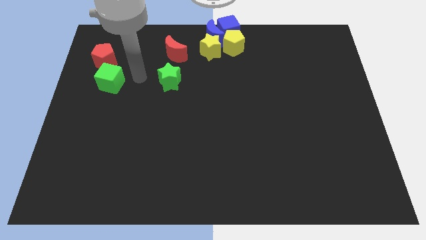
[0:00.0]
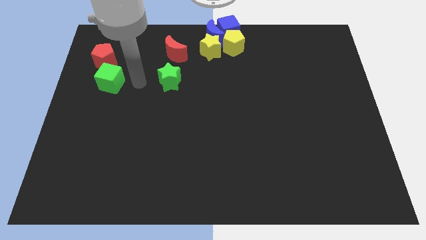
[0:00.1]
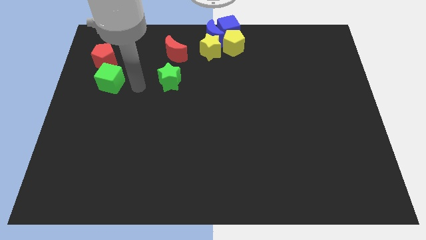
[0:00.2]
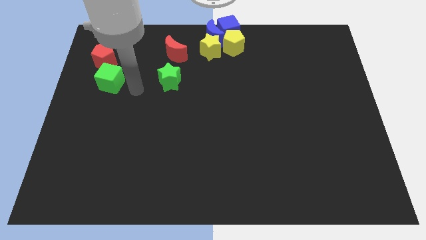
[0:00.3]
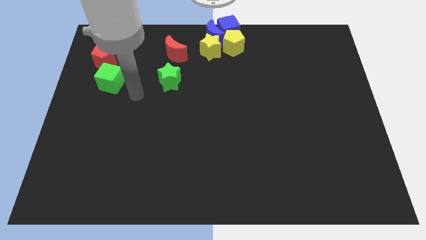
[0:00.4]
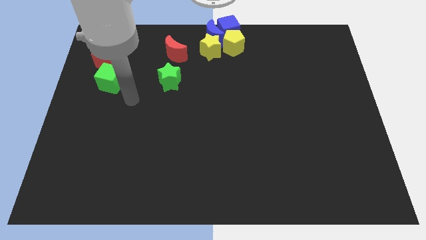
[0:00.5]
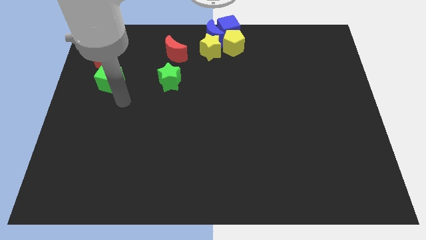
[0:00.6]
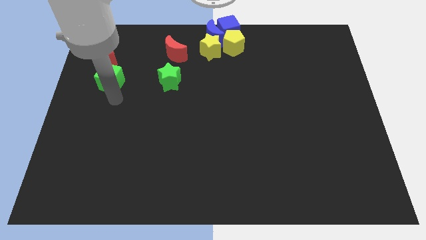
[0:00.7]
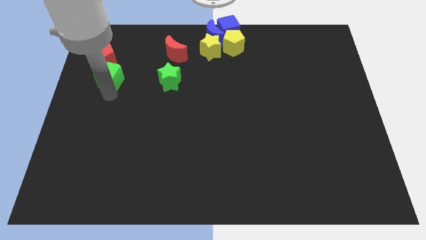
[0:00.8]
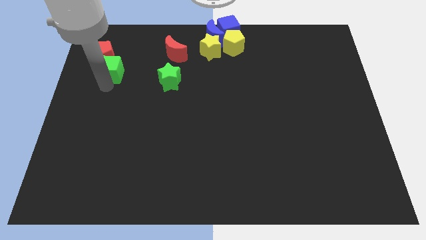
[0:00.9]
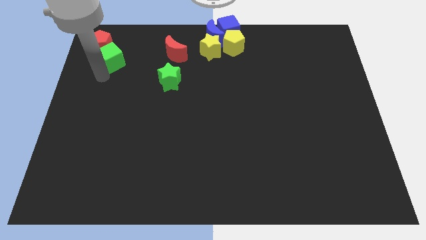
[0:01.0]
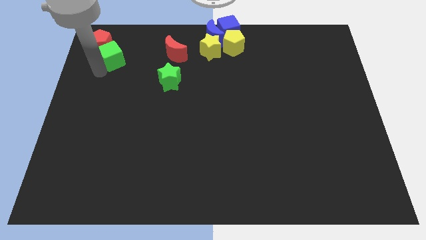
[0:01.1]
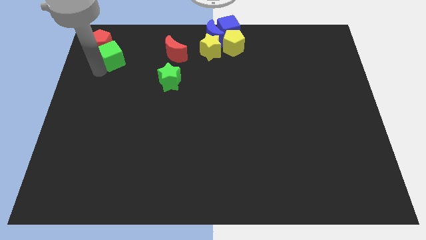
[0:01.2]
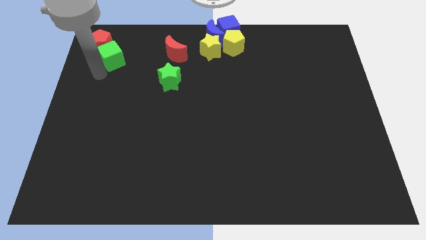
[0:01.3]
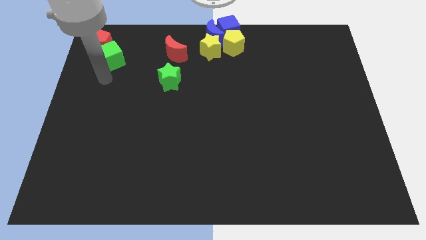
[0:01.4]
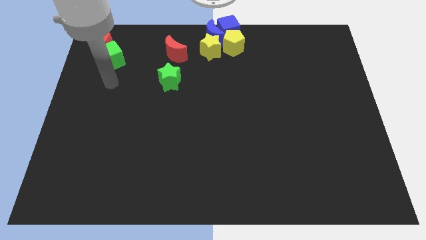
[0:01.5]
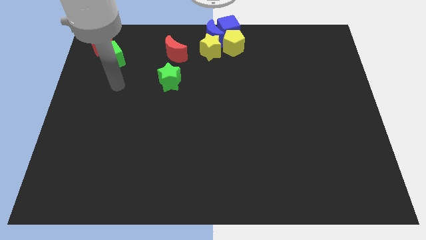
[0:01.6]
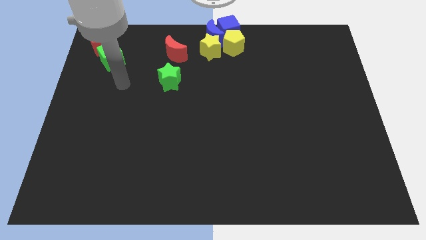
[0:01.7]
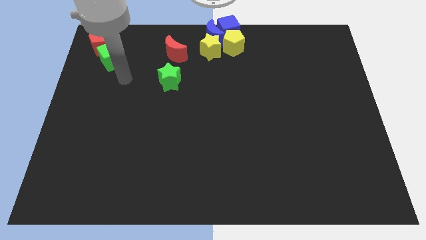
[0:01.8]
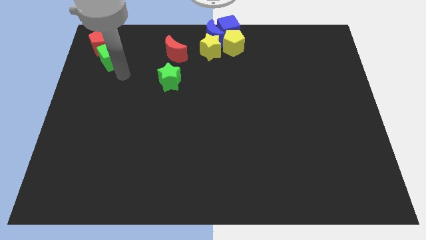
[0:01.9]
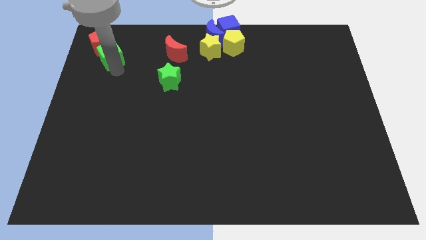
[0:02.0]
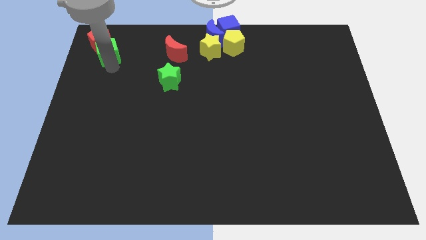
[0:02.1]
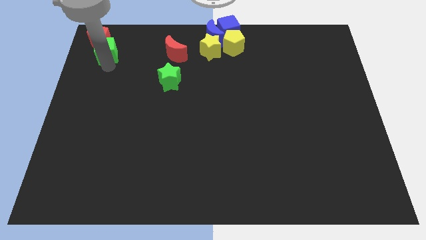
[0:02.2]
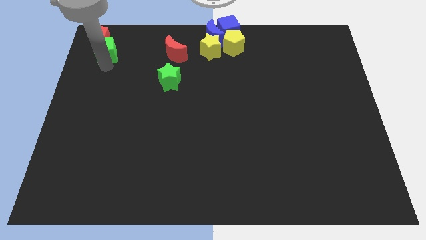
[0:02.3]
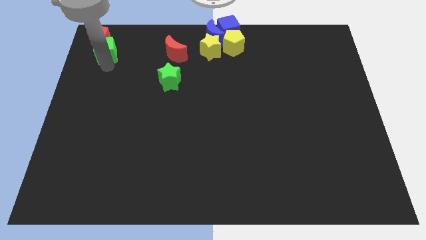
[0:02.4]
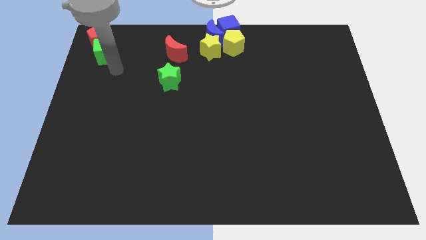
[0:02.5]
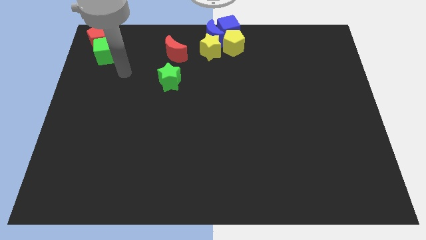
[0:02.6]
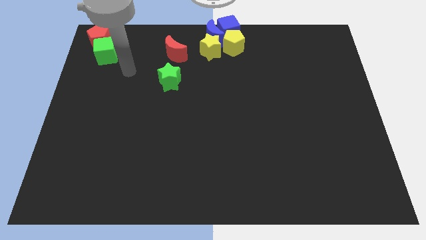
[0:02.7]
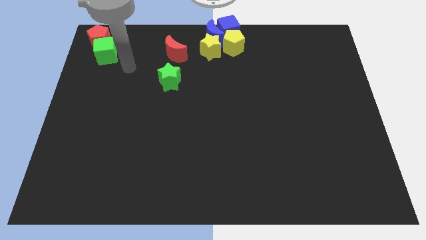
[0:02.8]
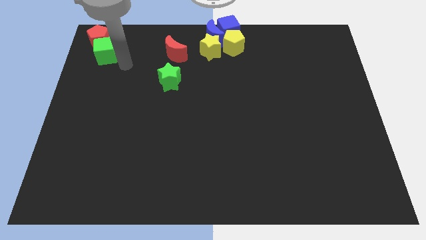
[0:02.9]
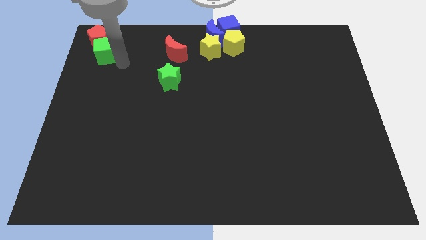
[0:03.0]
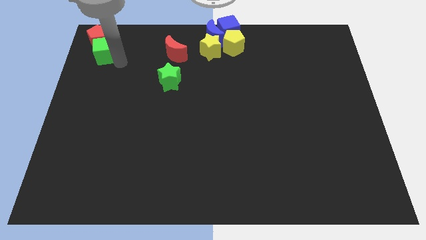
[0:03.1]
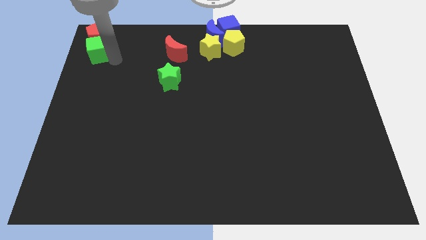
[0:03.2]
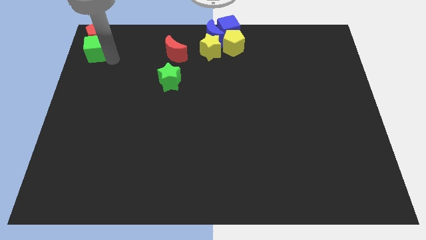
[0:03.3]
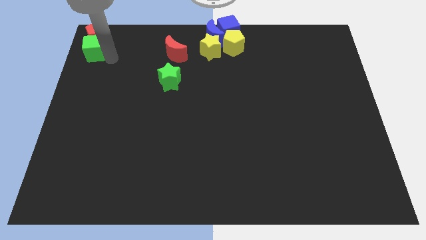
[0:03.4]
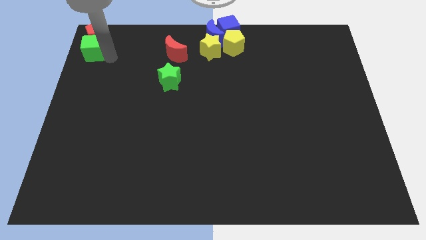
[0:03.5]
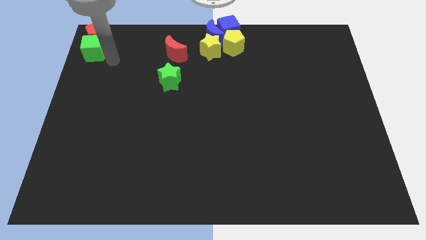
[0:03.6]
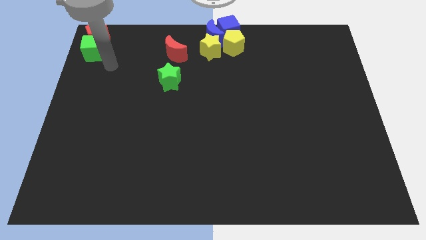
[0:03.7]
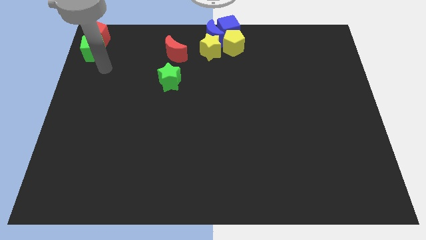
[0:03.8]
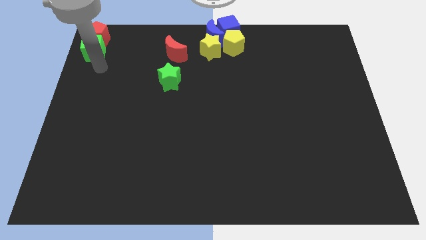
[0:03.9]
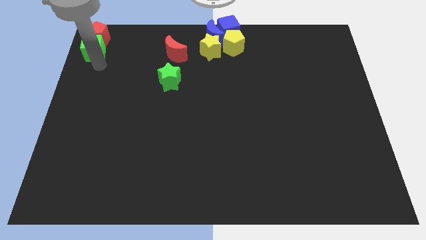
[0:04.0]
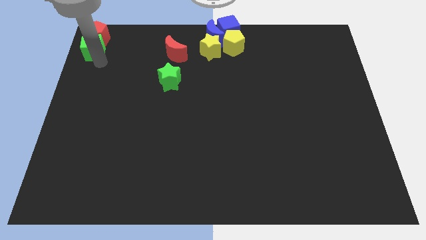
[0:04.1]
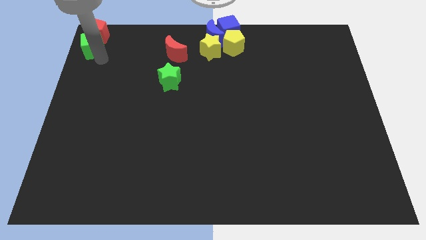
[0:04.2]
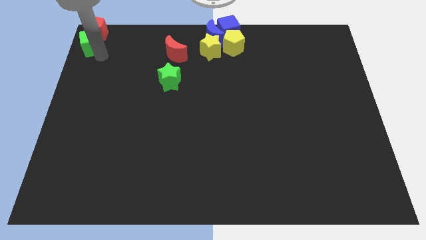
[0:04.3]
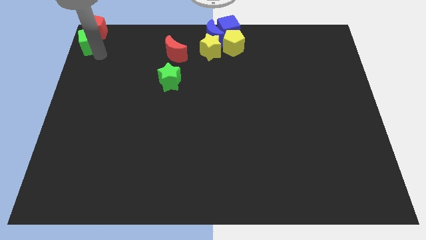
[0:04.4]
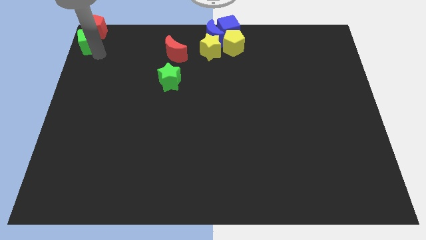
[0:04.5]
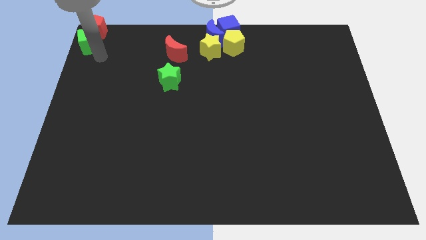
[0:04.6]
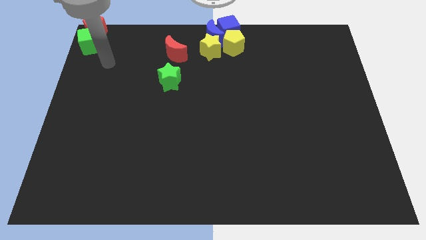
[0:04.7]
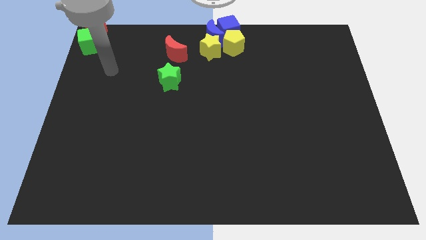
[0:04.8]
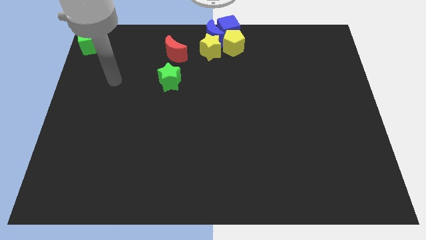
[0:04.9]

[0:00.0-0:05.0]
place the green cube and red pentagon at the top left side of the board

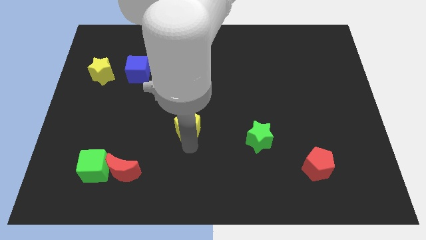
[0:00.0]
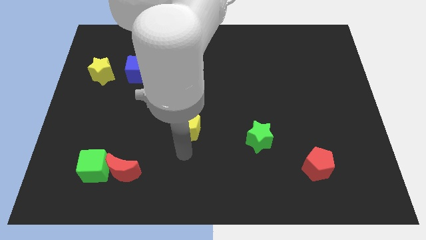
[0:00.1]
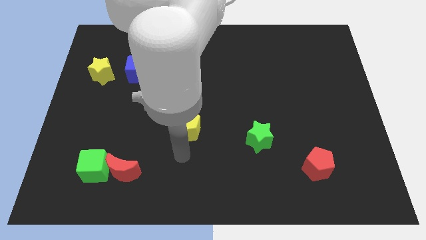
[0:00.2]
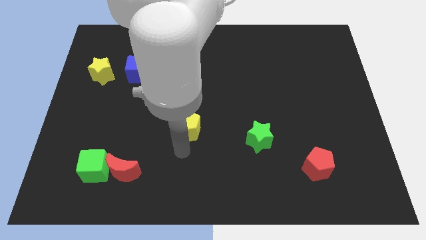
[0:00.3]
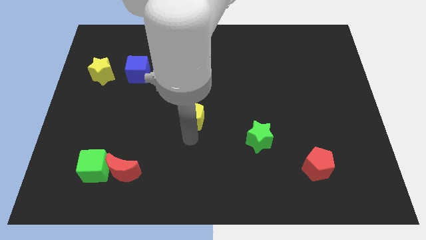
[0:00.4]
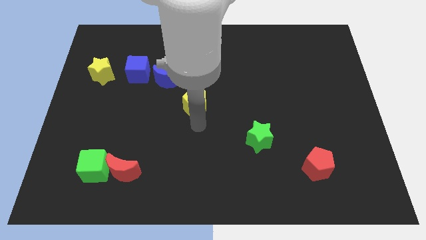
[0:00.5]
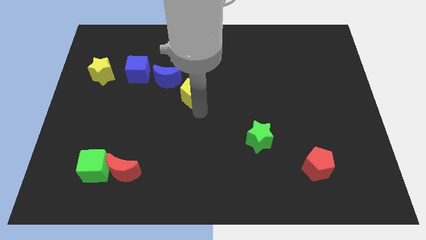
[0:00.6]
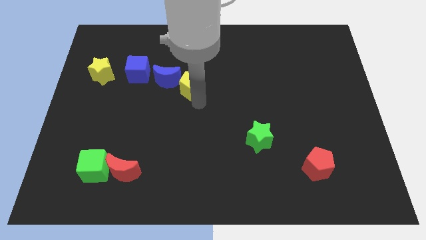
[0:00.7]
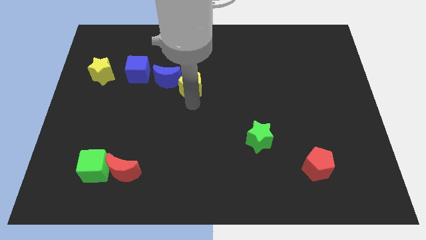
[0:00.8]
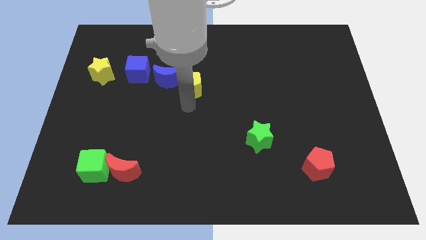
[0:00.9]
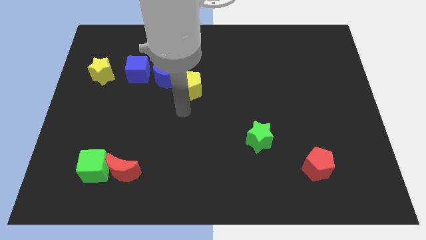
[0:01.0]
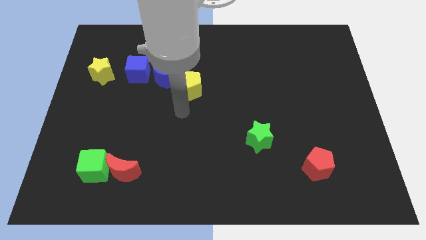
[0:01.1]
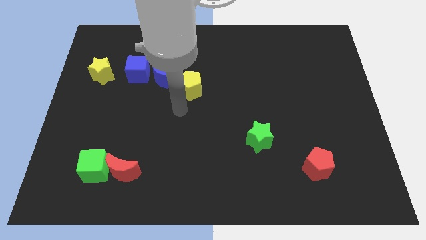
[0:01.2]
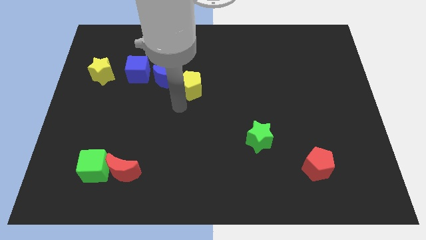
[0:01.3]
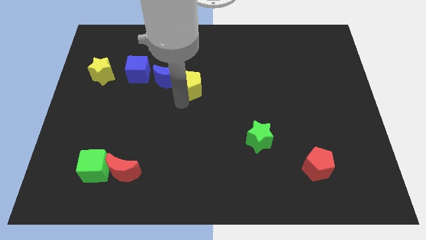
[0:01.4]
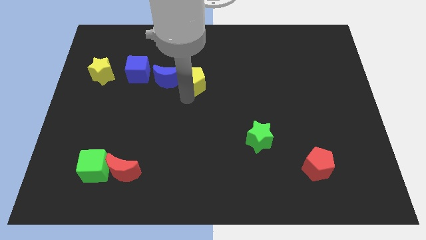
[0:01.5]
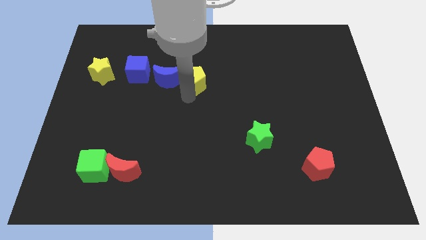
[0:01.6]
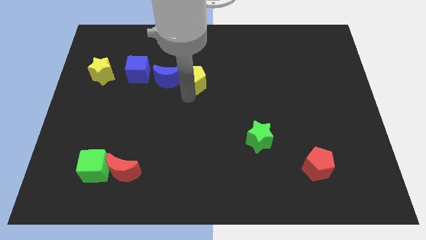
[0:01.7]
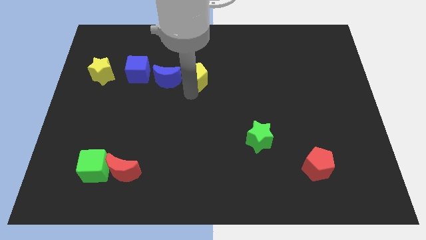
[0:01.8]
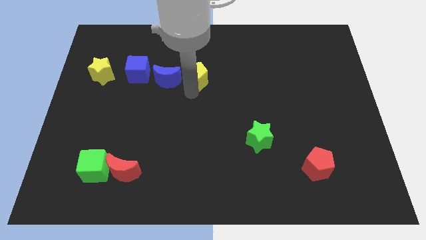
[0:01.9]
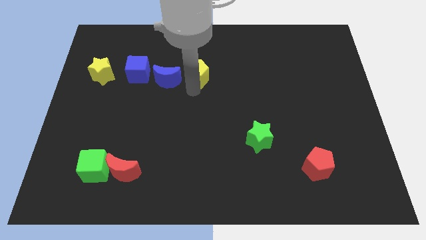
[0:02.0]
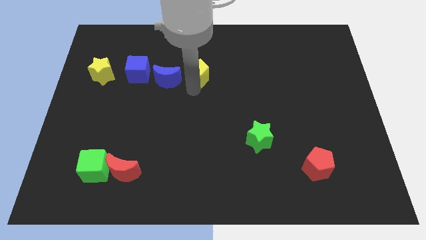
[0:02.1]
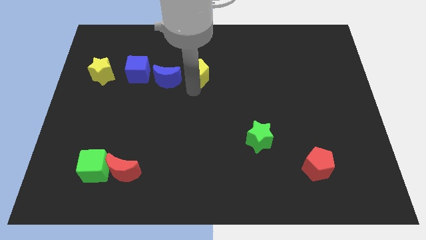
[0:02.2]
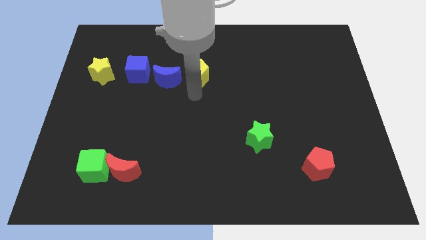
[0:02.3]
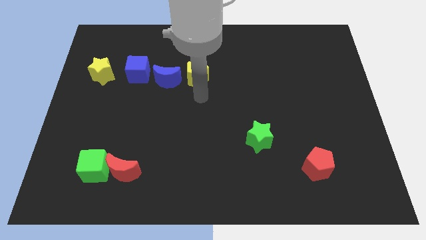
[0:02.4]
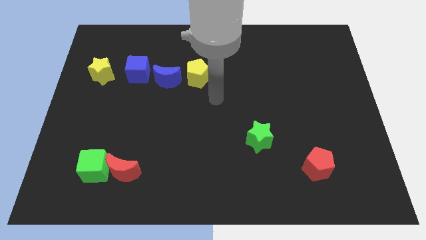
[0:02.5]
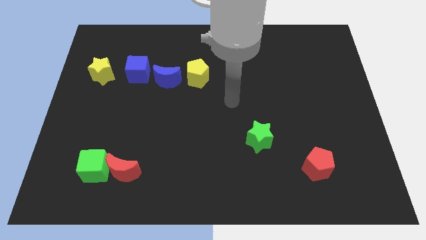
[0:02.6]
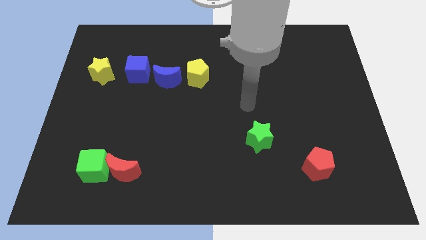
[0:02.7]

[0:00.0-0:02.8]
push the bottom yellow pentagon right to the blue crescent

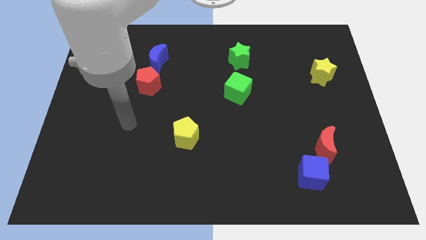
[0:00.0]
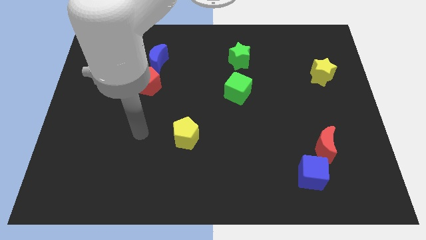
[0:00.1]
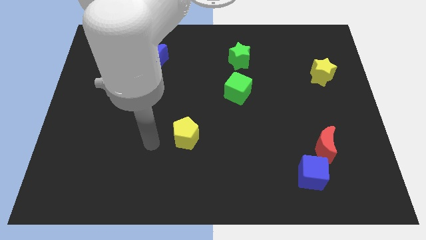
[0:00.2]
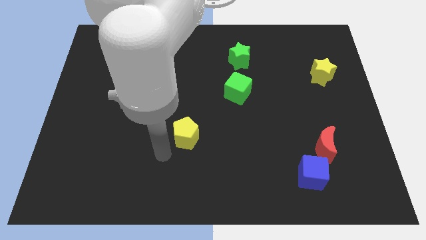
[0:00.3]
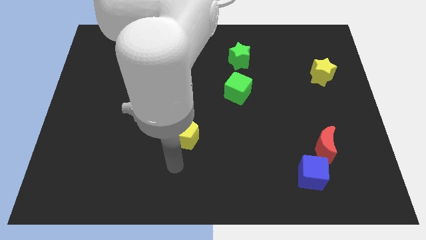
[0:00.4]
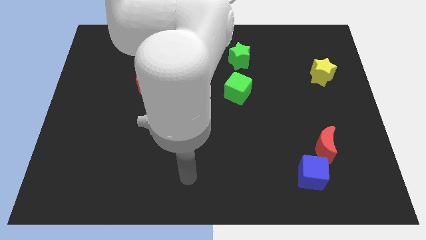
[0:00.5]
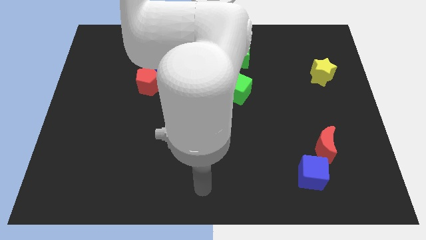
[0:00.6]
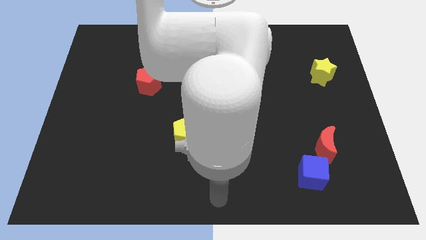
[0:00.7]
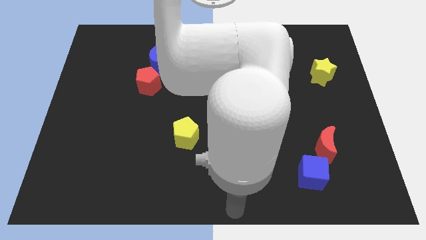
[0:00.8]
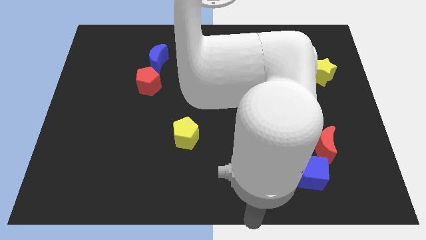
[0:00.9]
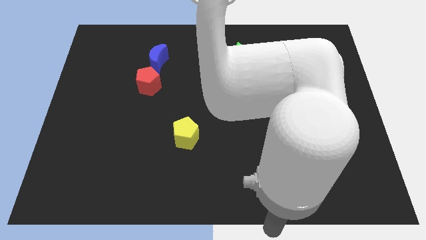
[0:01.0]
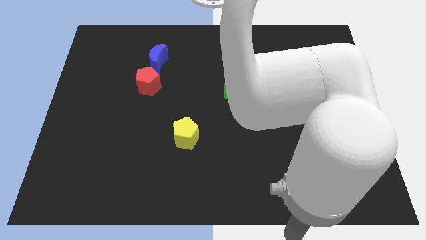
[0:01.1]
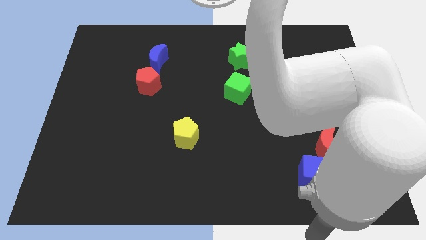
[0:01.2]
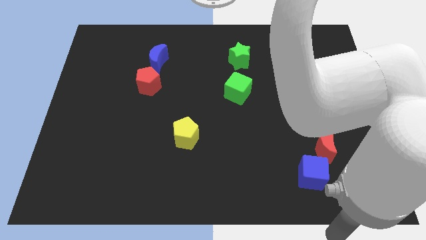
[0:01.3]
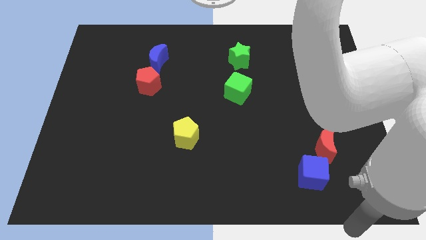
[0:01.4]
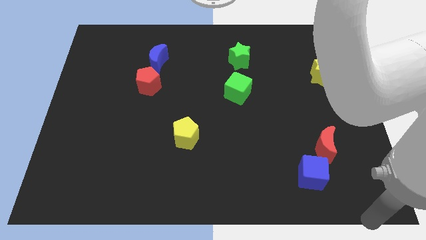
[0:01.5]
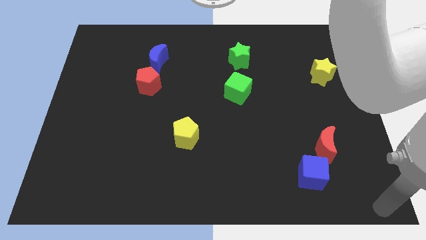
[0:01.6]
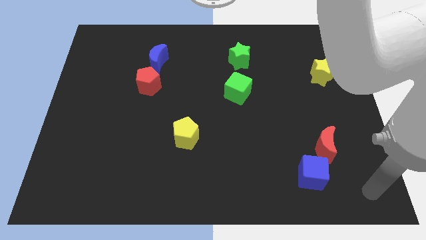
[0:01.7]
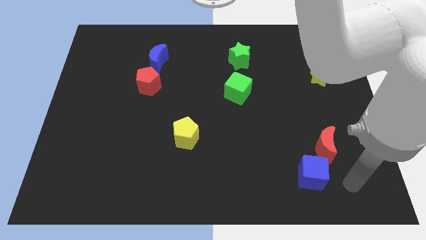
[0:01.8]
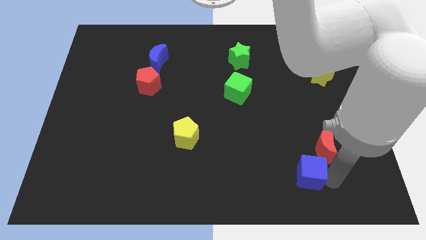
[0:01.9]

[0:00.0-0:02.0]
place your arm at the bottom of the red moon
